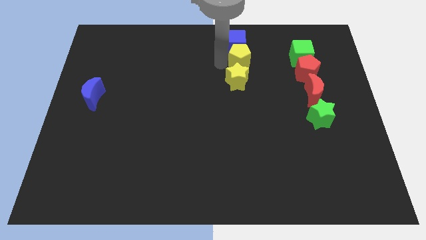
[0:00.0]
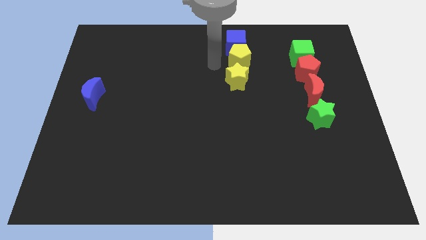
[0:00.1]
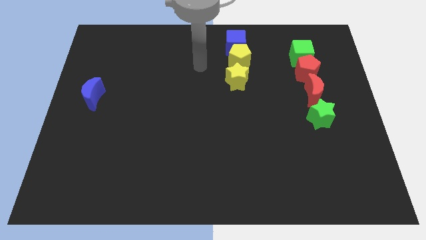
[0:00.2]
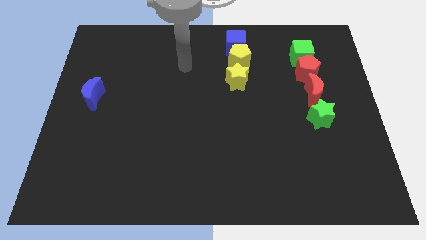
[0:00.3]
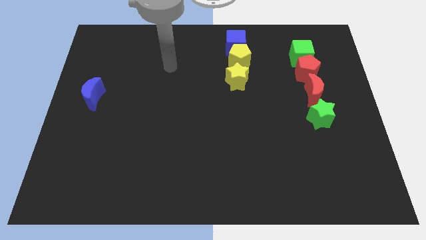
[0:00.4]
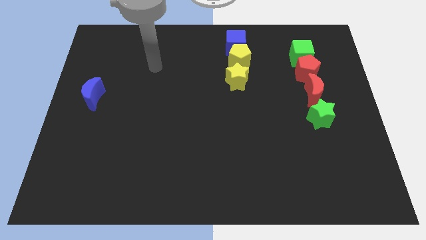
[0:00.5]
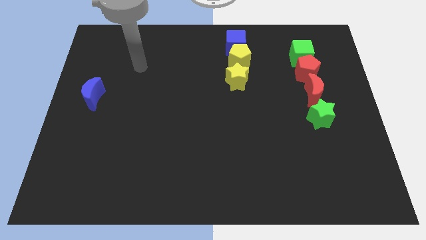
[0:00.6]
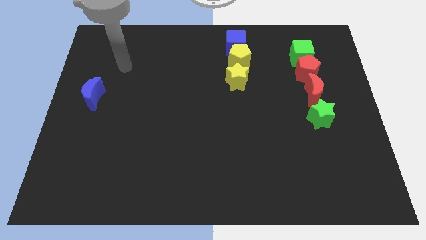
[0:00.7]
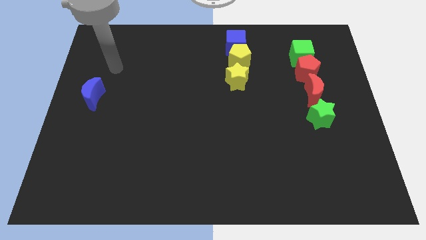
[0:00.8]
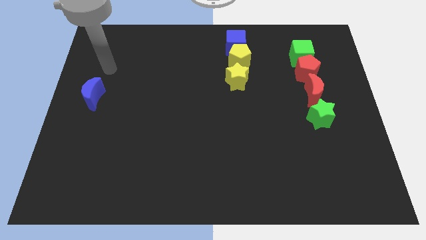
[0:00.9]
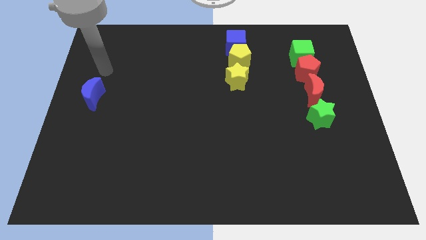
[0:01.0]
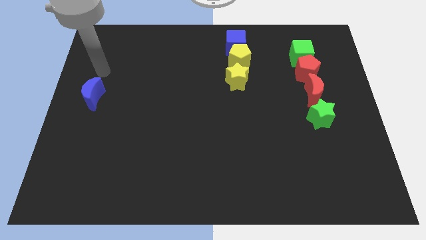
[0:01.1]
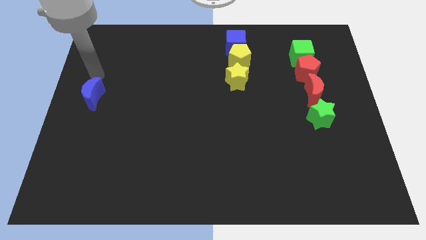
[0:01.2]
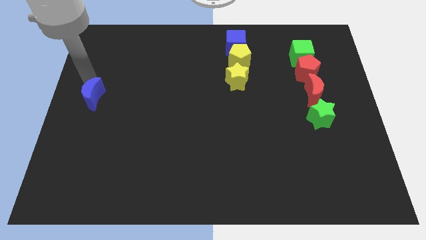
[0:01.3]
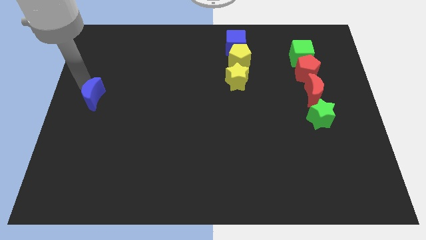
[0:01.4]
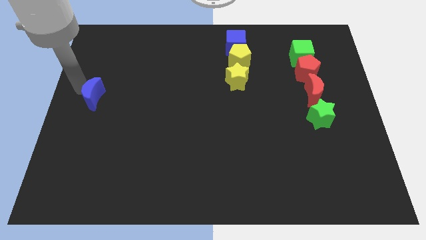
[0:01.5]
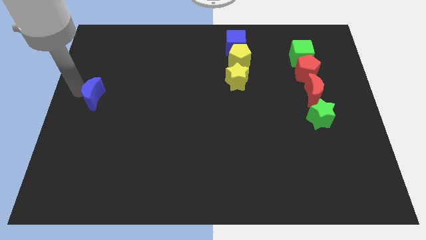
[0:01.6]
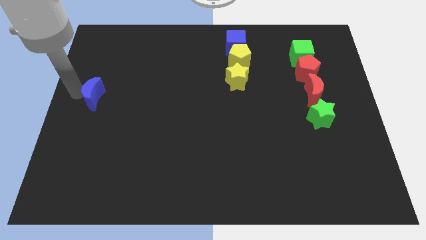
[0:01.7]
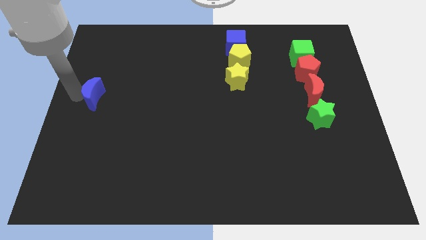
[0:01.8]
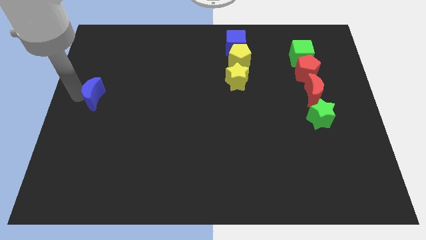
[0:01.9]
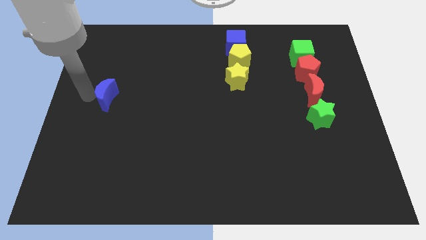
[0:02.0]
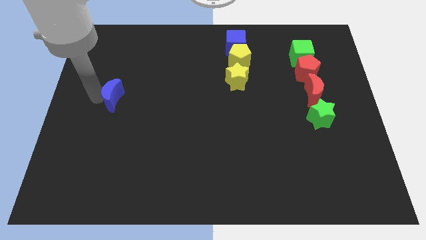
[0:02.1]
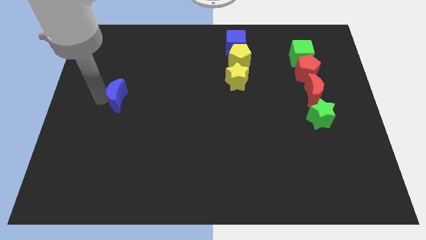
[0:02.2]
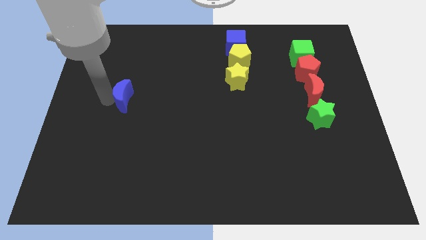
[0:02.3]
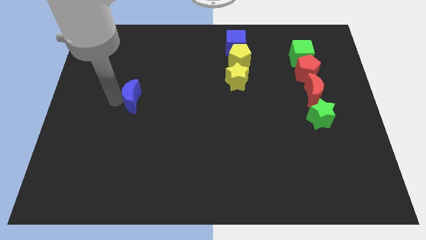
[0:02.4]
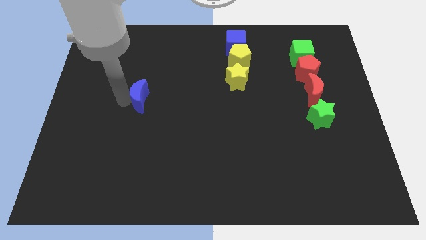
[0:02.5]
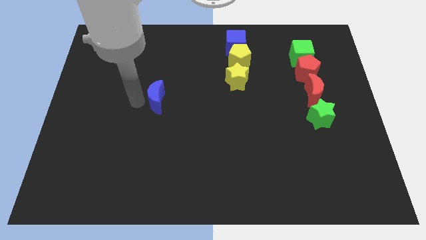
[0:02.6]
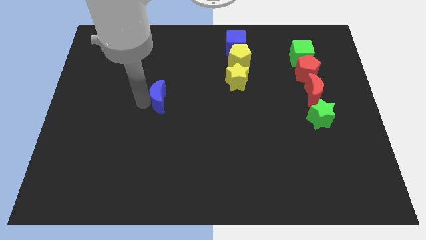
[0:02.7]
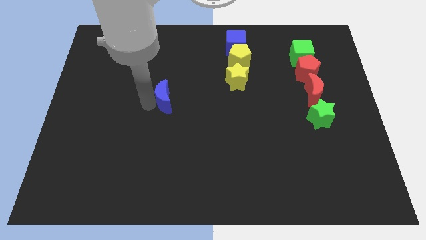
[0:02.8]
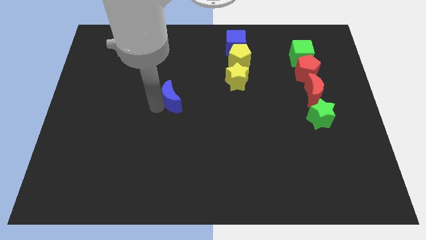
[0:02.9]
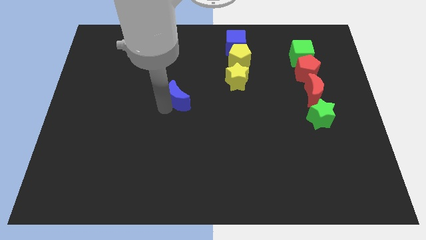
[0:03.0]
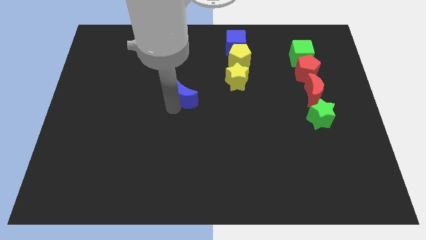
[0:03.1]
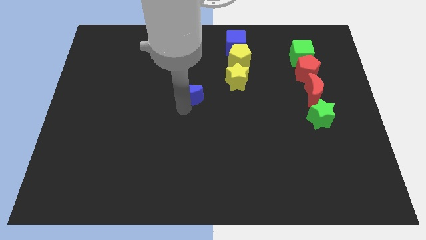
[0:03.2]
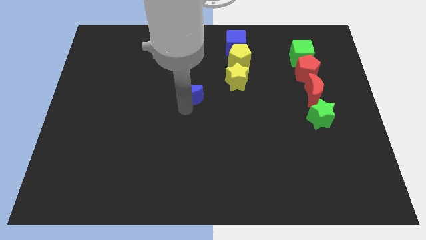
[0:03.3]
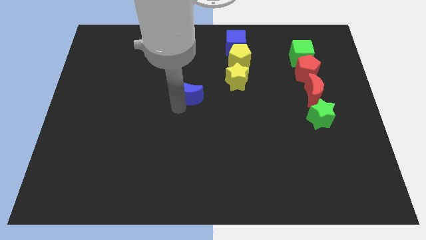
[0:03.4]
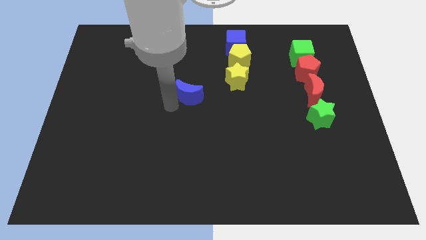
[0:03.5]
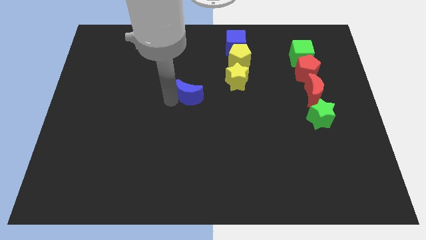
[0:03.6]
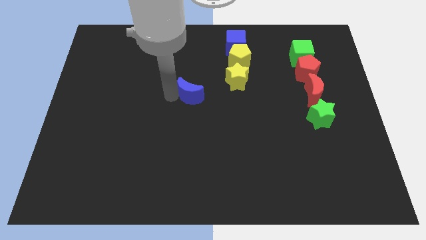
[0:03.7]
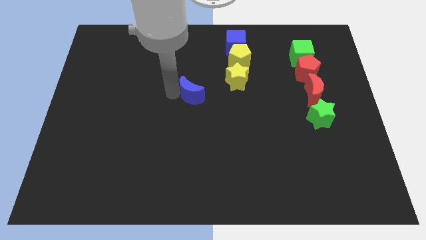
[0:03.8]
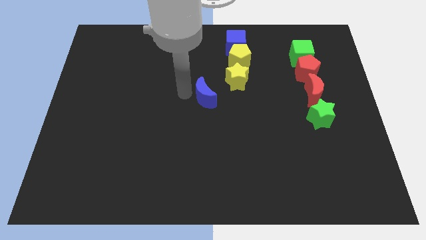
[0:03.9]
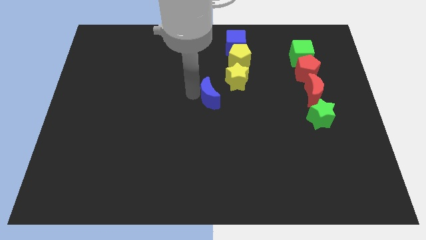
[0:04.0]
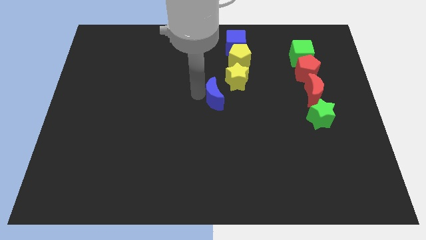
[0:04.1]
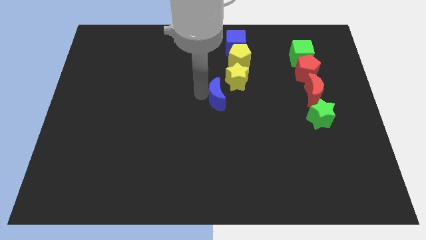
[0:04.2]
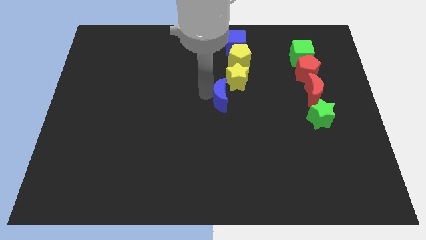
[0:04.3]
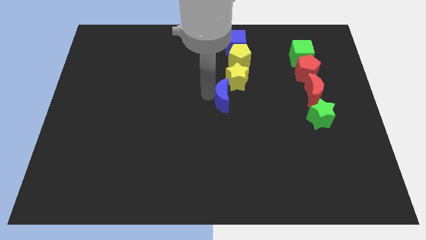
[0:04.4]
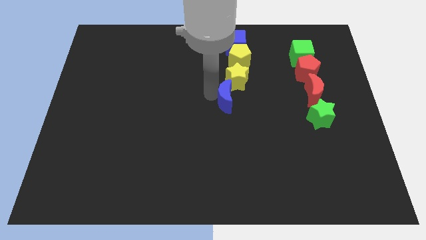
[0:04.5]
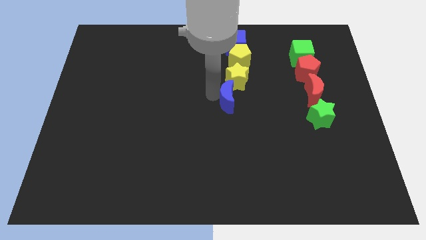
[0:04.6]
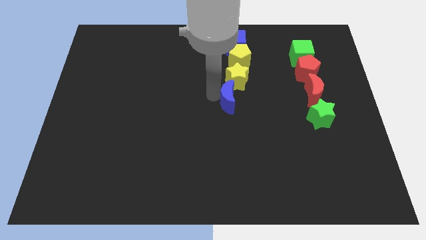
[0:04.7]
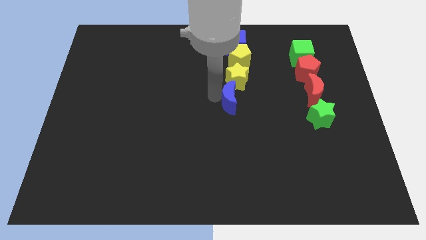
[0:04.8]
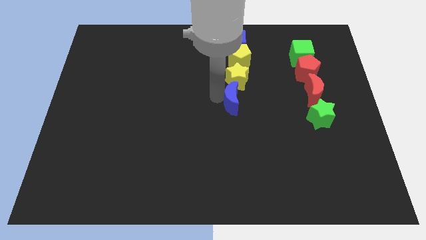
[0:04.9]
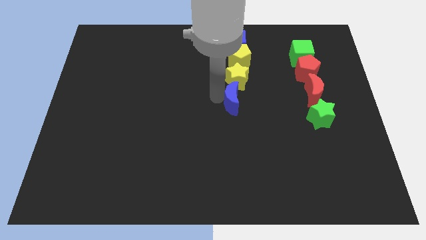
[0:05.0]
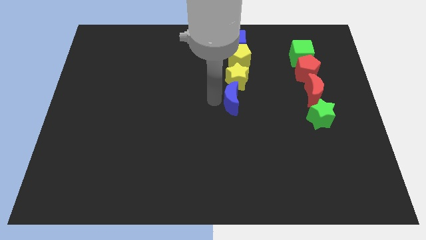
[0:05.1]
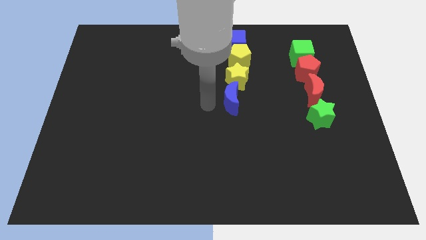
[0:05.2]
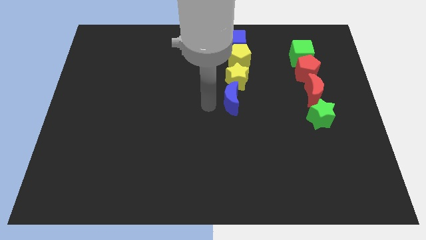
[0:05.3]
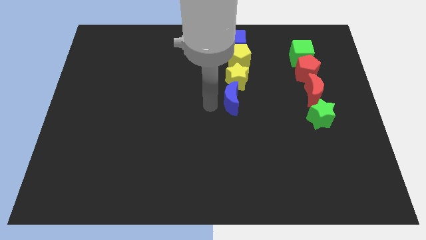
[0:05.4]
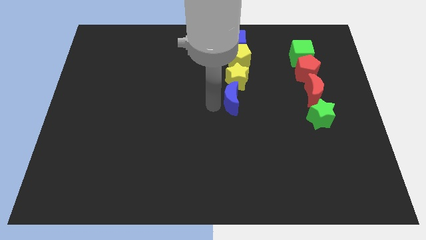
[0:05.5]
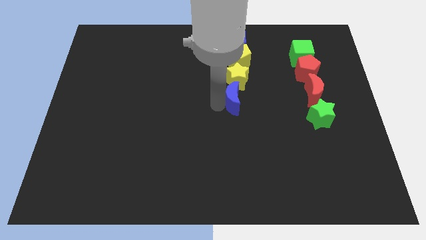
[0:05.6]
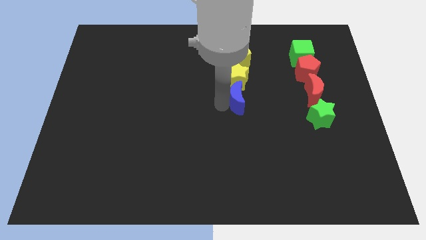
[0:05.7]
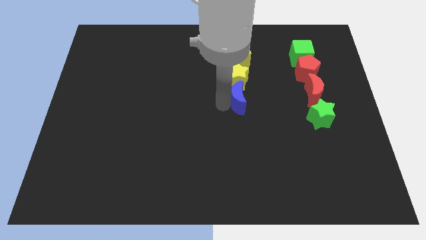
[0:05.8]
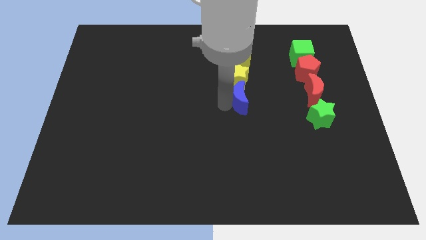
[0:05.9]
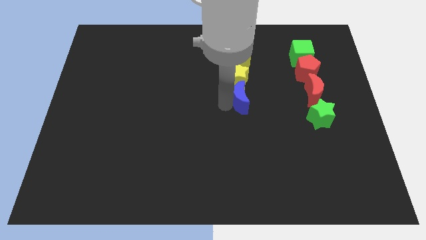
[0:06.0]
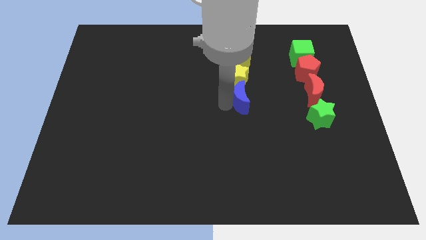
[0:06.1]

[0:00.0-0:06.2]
put the blue crescent underneath the yellow star to form a vertical line of blocks

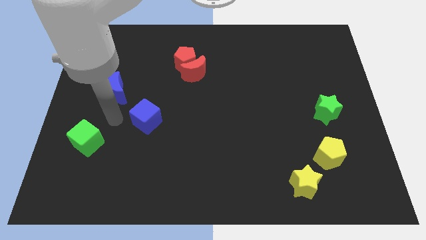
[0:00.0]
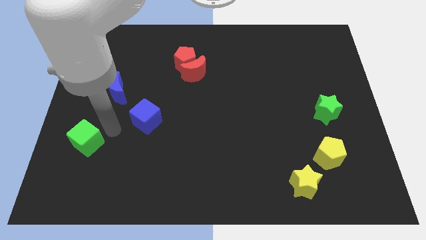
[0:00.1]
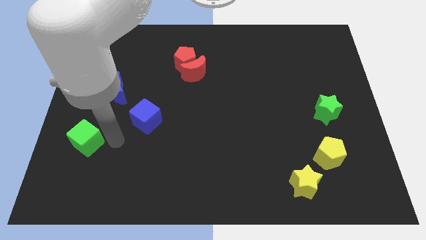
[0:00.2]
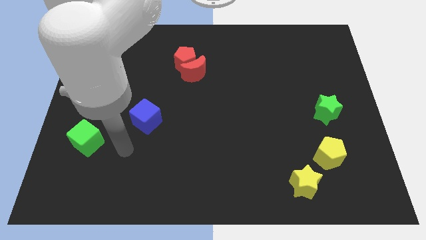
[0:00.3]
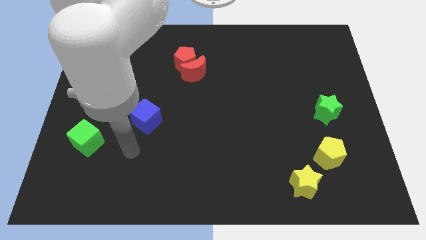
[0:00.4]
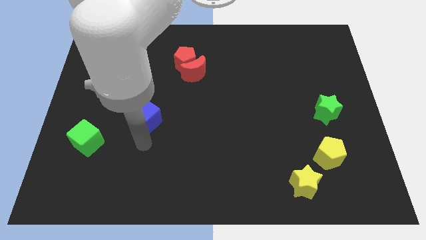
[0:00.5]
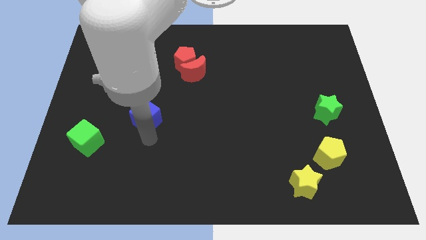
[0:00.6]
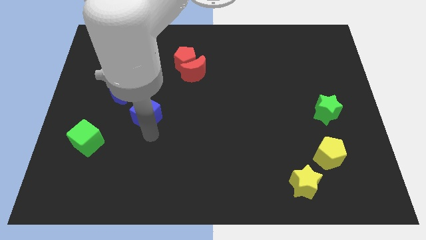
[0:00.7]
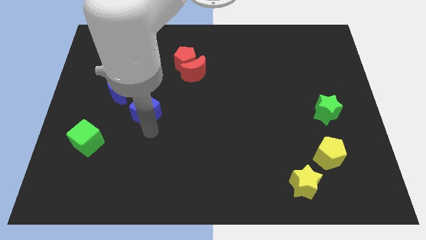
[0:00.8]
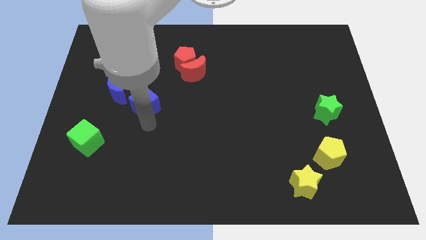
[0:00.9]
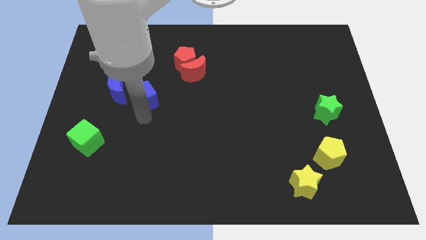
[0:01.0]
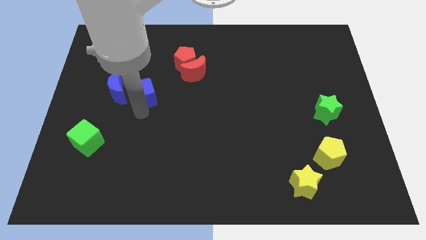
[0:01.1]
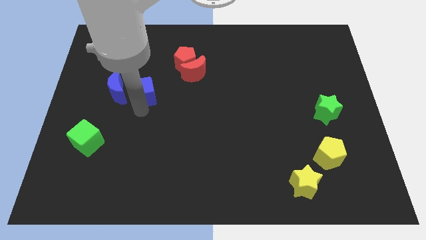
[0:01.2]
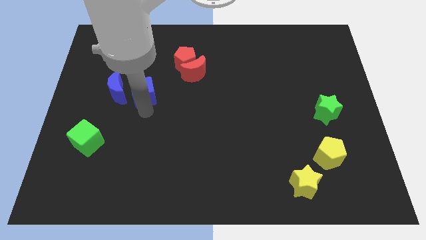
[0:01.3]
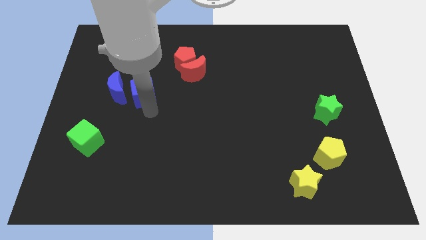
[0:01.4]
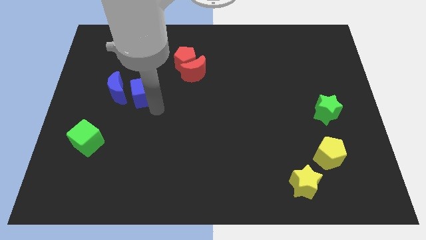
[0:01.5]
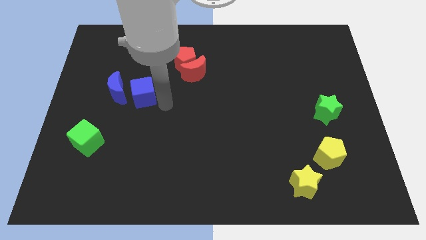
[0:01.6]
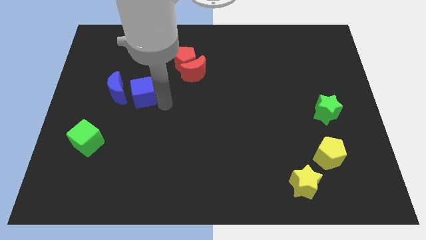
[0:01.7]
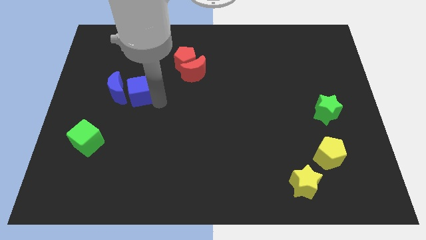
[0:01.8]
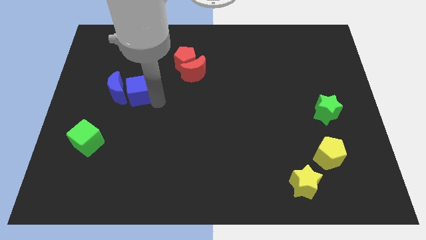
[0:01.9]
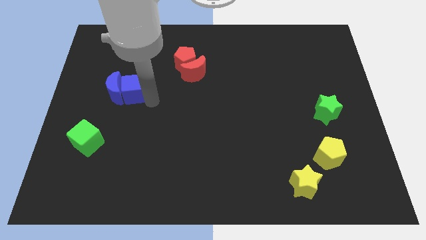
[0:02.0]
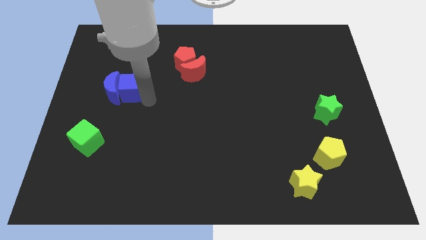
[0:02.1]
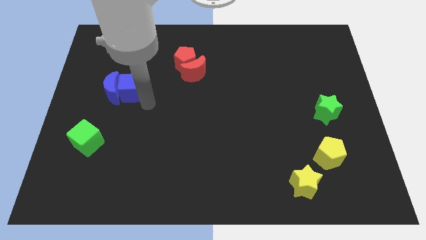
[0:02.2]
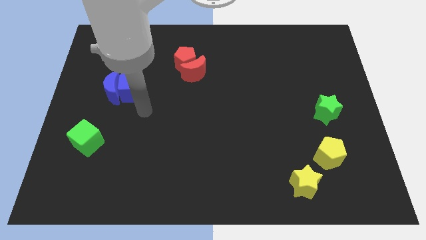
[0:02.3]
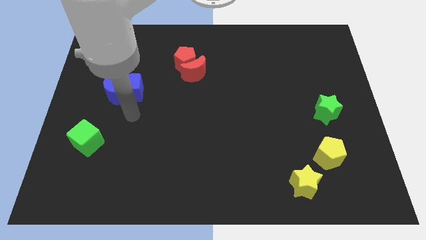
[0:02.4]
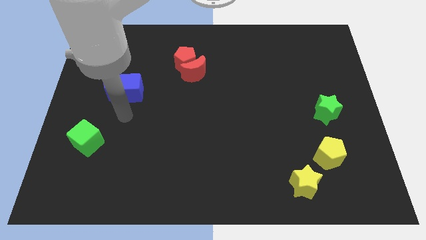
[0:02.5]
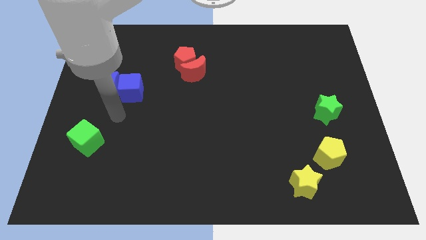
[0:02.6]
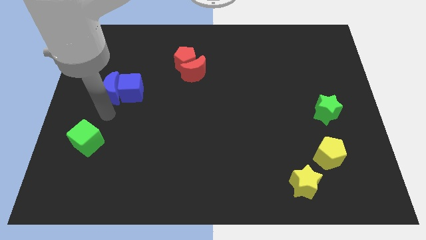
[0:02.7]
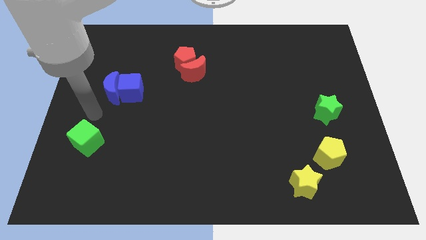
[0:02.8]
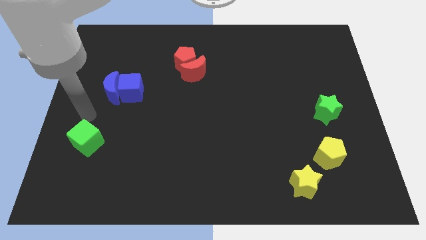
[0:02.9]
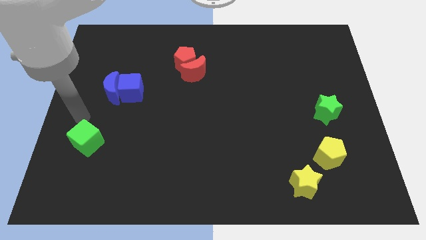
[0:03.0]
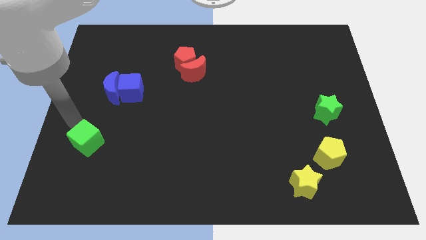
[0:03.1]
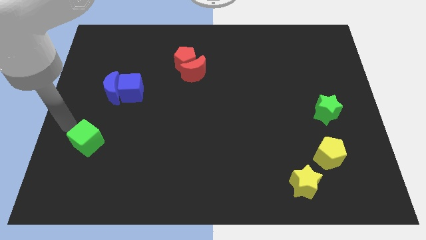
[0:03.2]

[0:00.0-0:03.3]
push blue cube in to blue moon
